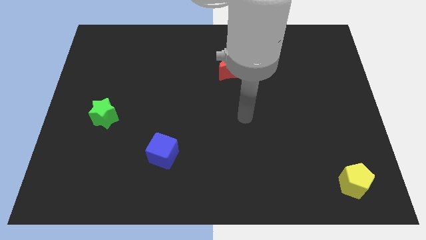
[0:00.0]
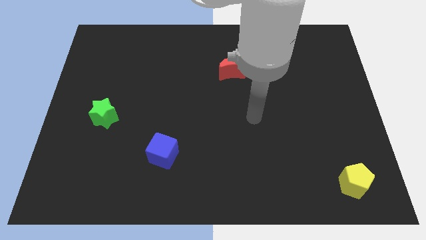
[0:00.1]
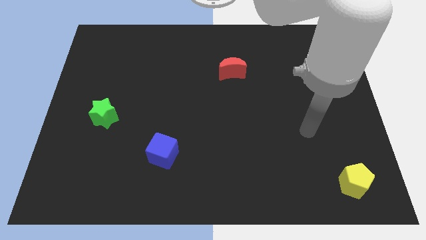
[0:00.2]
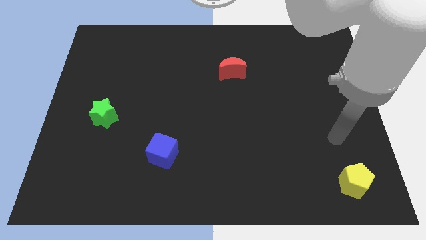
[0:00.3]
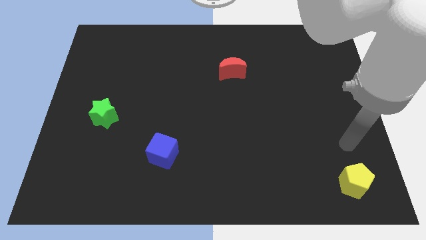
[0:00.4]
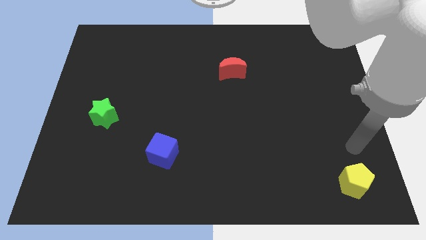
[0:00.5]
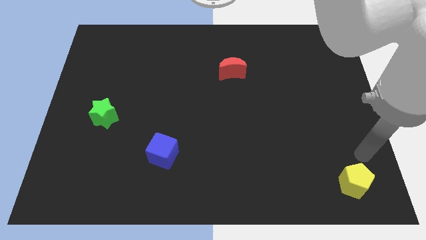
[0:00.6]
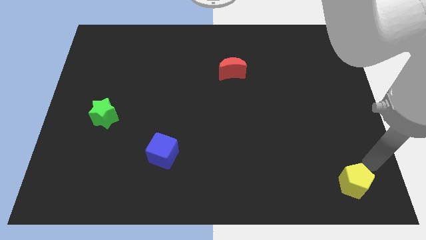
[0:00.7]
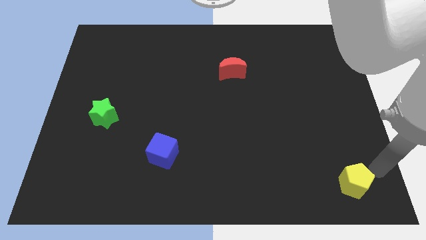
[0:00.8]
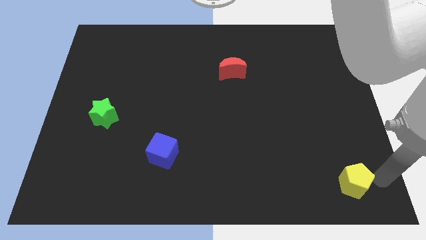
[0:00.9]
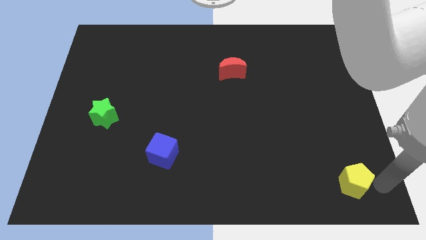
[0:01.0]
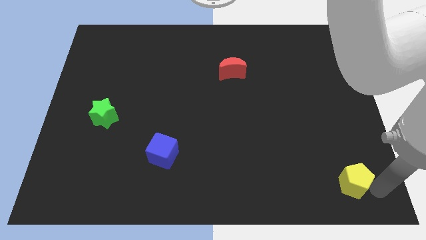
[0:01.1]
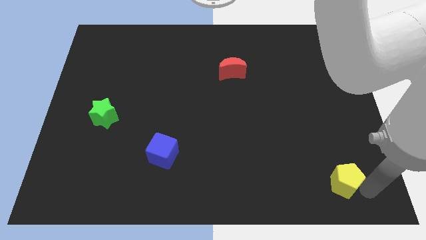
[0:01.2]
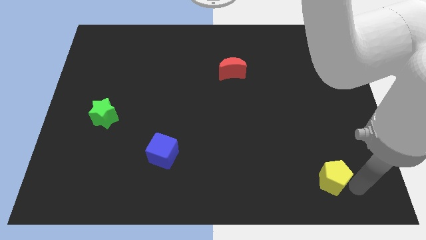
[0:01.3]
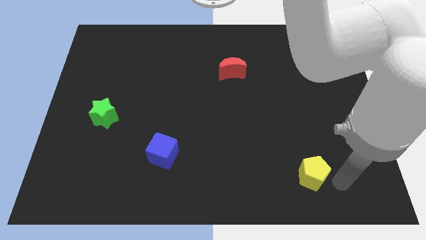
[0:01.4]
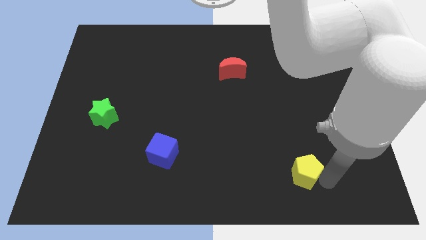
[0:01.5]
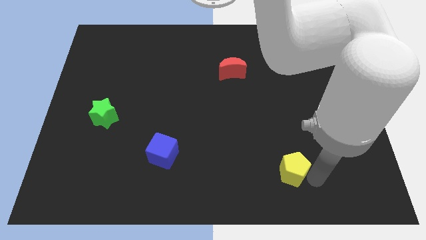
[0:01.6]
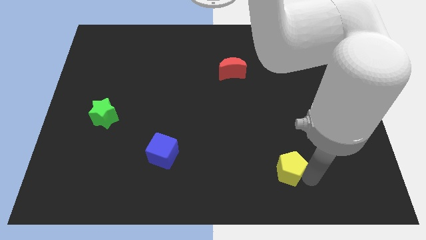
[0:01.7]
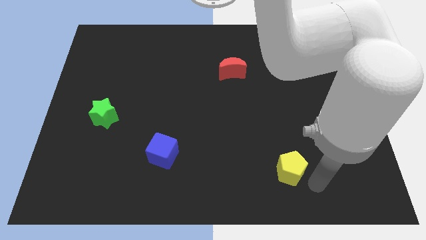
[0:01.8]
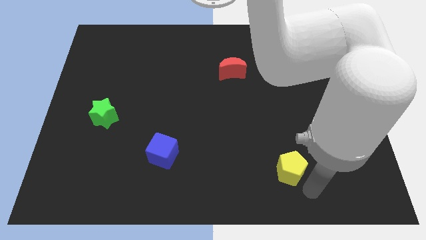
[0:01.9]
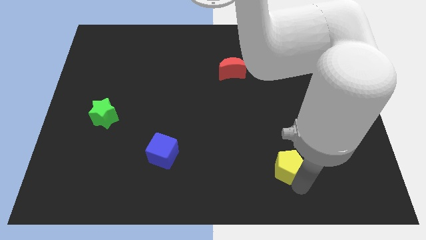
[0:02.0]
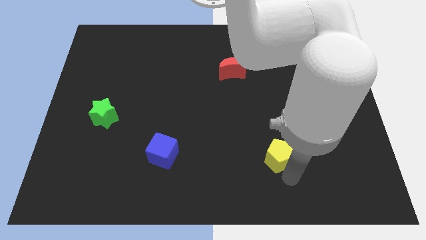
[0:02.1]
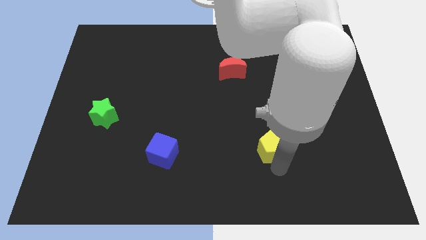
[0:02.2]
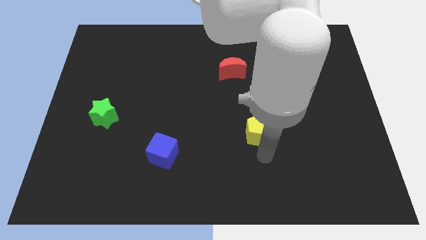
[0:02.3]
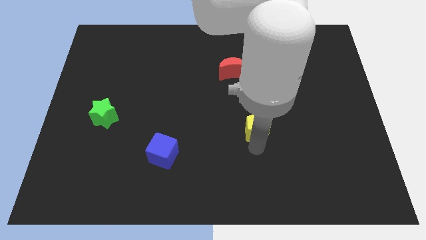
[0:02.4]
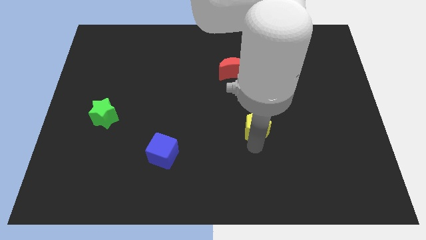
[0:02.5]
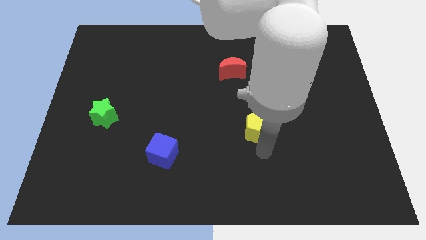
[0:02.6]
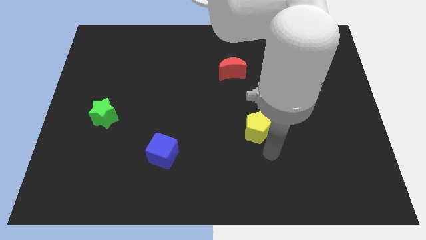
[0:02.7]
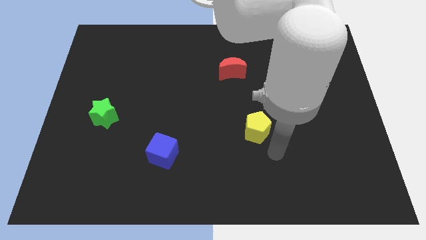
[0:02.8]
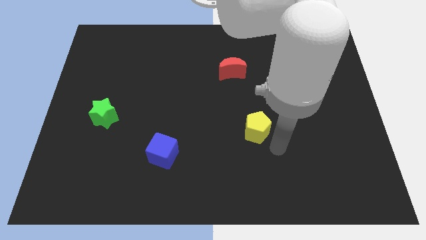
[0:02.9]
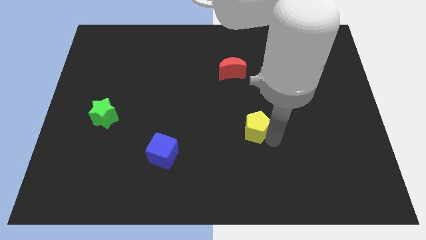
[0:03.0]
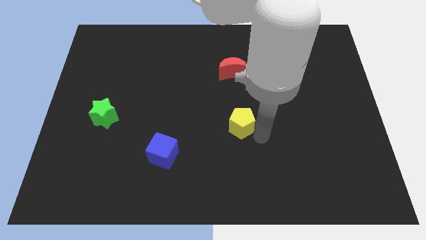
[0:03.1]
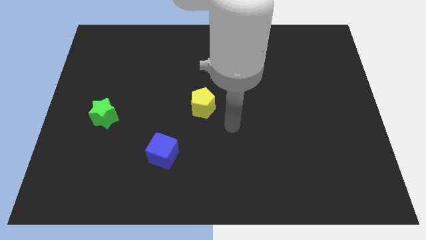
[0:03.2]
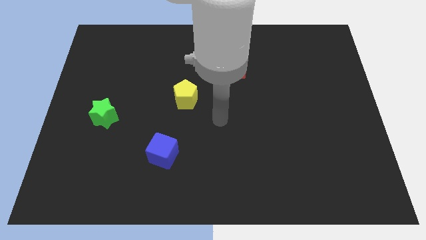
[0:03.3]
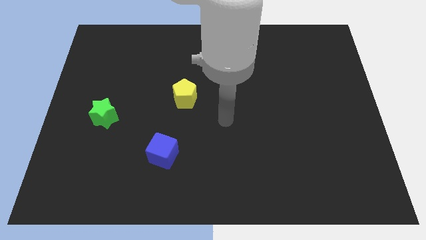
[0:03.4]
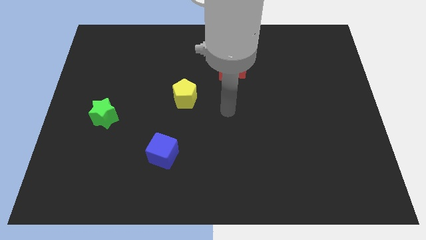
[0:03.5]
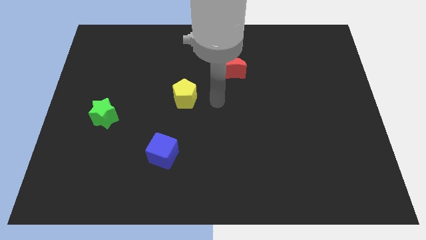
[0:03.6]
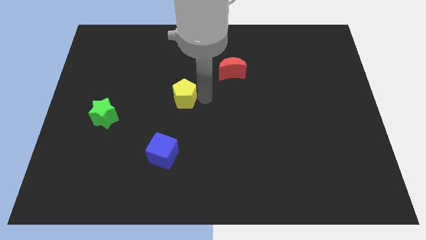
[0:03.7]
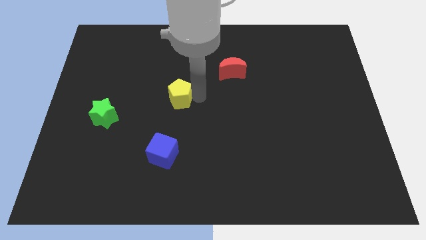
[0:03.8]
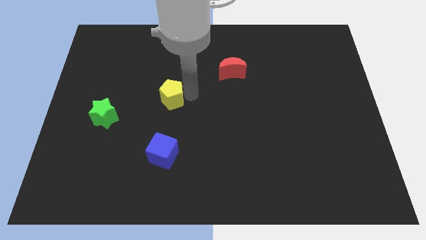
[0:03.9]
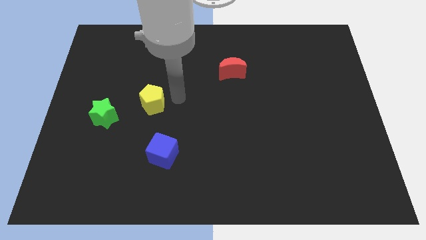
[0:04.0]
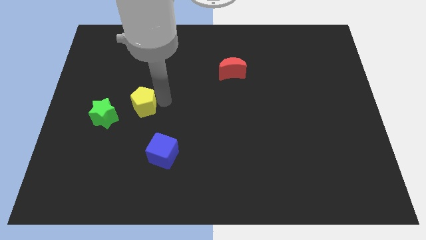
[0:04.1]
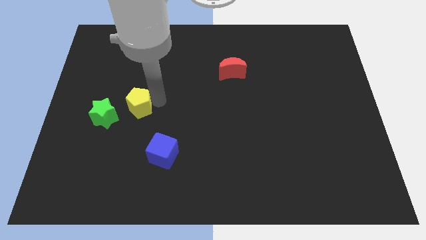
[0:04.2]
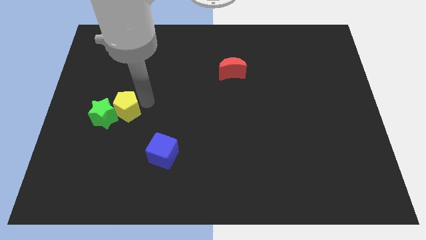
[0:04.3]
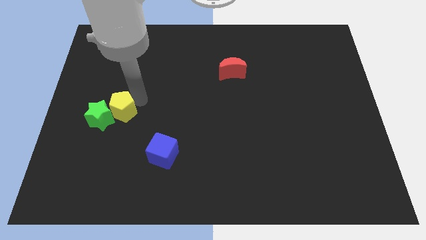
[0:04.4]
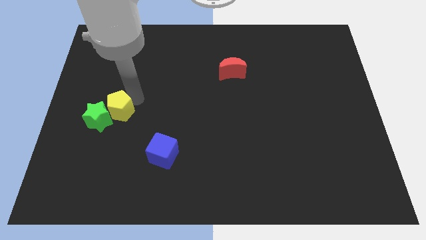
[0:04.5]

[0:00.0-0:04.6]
slide the pentagon to the green star

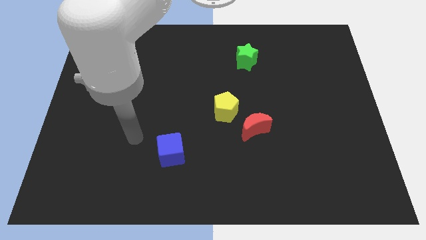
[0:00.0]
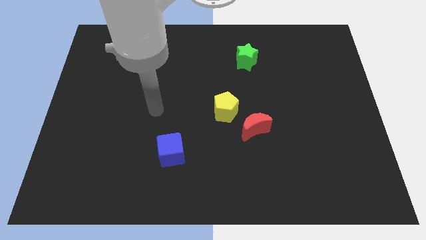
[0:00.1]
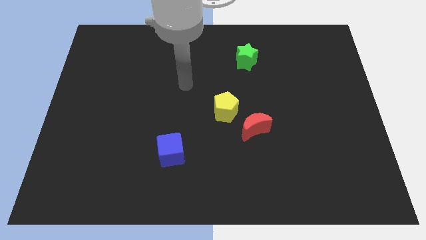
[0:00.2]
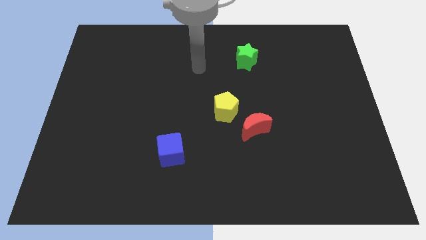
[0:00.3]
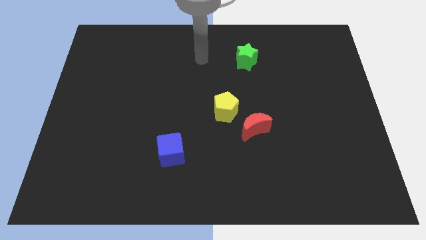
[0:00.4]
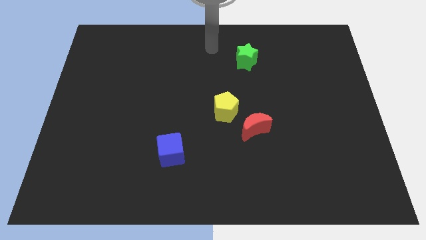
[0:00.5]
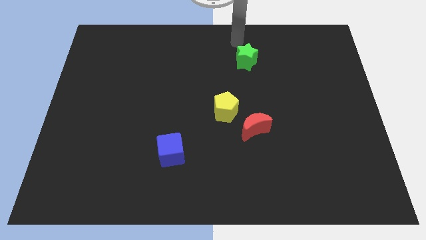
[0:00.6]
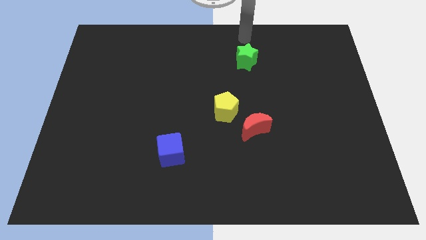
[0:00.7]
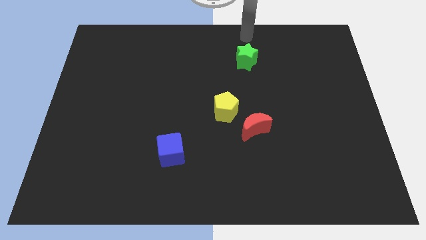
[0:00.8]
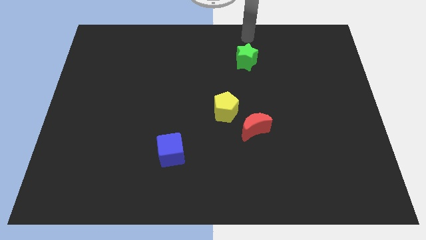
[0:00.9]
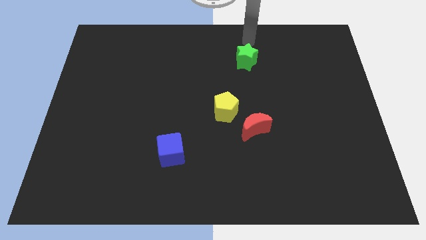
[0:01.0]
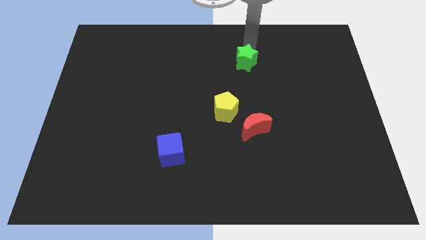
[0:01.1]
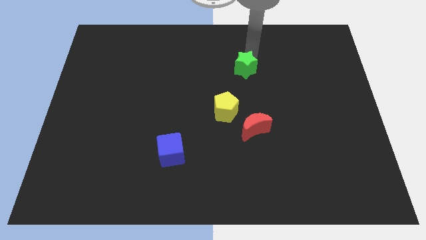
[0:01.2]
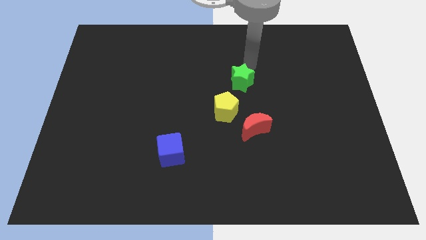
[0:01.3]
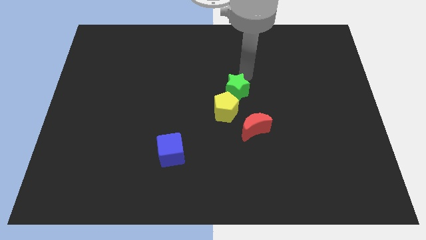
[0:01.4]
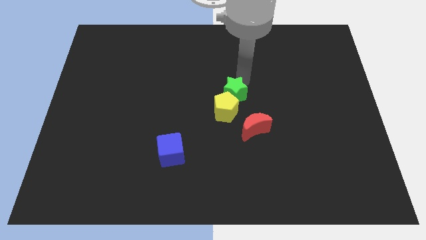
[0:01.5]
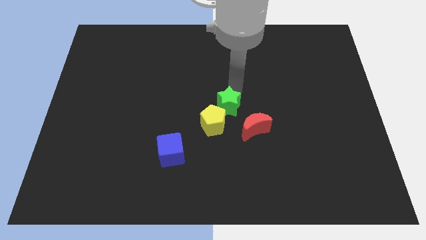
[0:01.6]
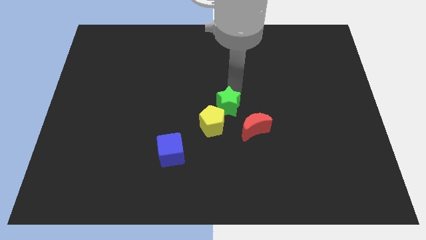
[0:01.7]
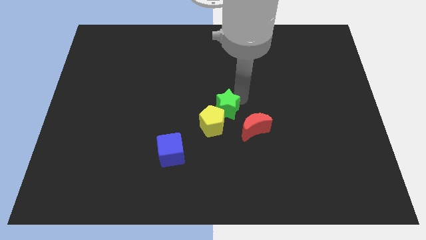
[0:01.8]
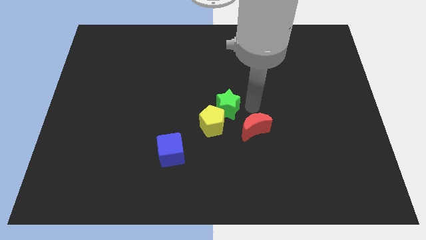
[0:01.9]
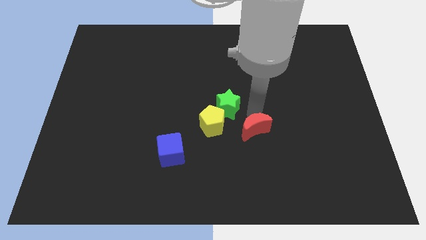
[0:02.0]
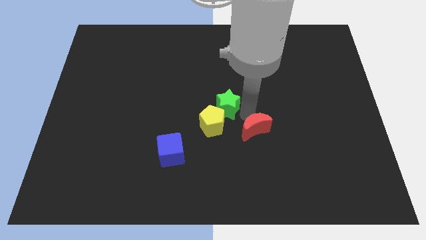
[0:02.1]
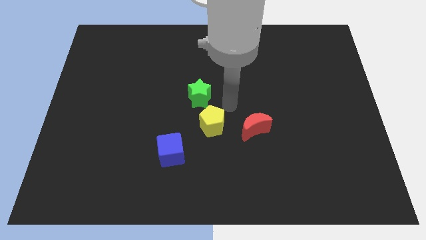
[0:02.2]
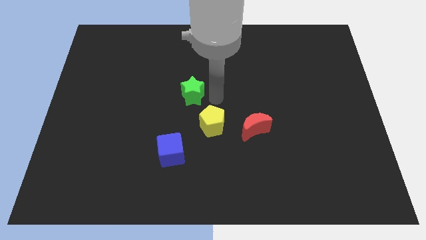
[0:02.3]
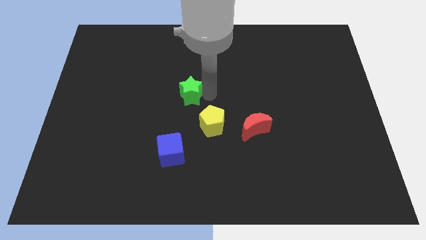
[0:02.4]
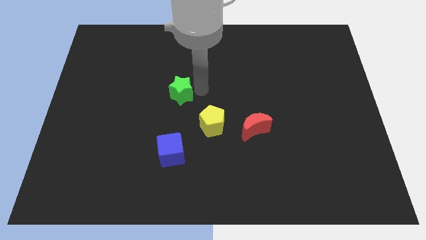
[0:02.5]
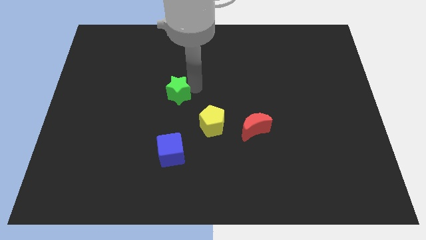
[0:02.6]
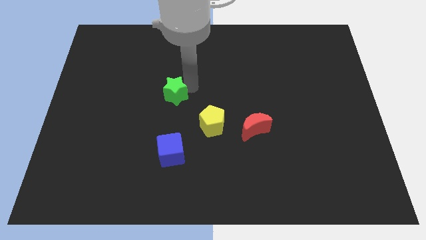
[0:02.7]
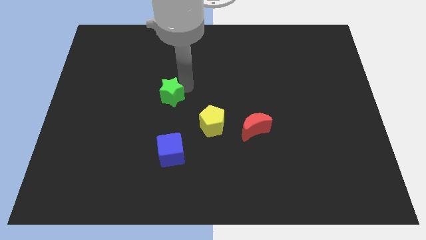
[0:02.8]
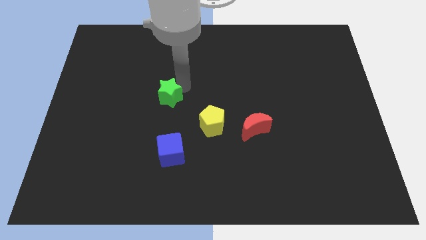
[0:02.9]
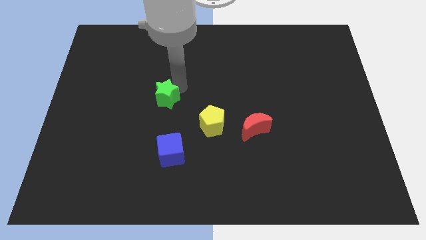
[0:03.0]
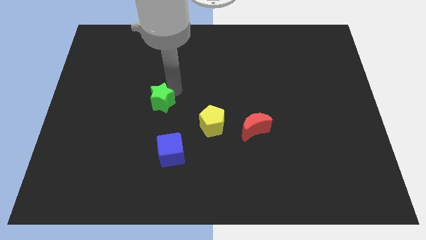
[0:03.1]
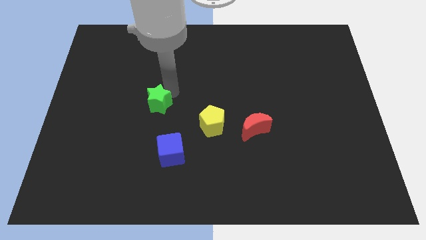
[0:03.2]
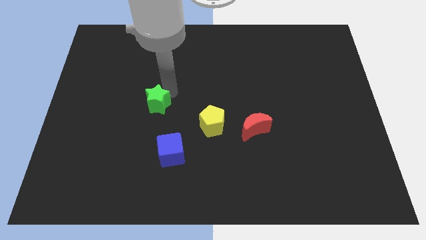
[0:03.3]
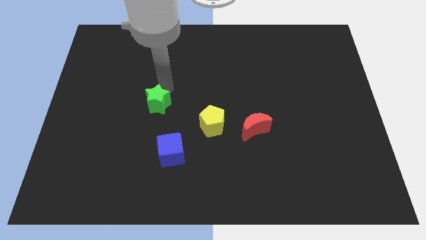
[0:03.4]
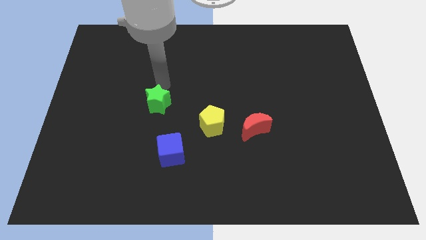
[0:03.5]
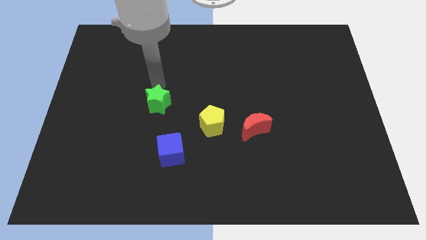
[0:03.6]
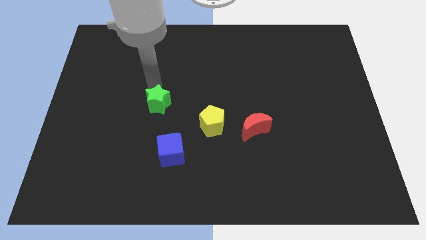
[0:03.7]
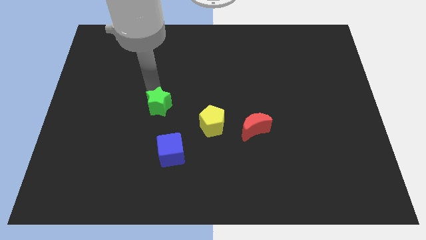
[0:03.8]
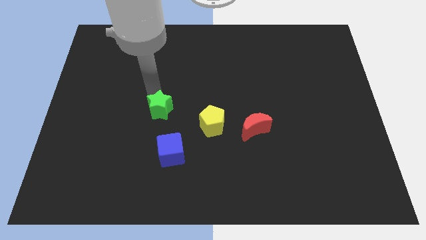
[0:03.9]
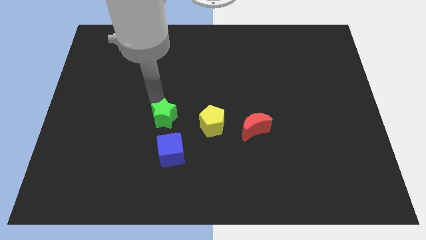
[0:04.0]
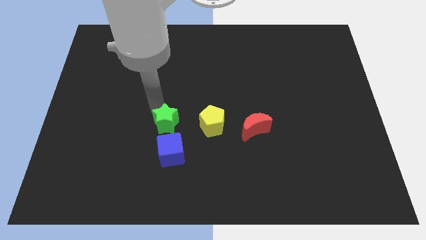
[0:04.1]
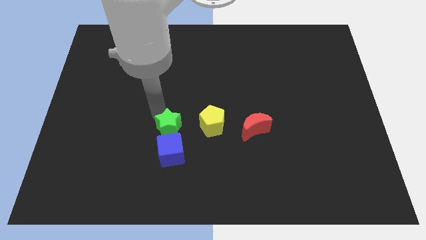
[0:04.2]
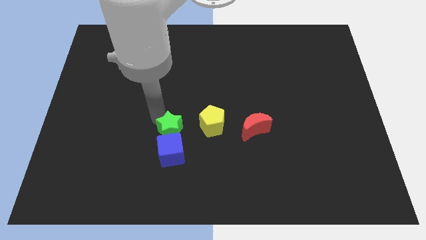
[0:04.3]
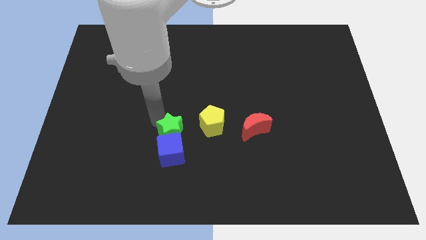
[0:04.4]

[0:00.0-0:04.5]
slide the green block next to the blue block
